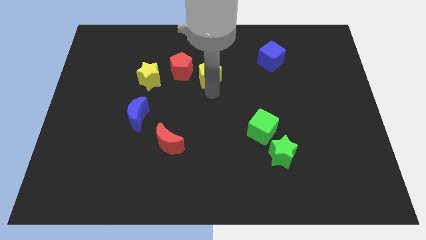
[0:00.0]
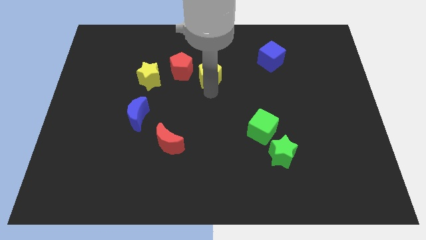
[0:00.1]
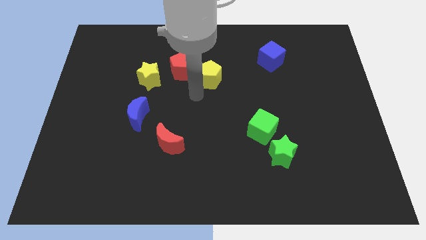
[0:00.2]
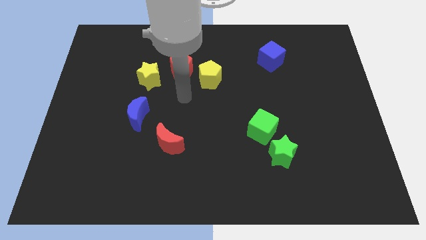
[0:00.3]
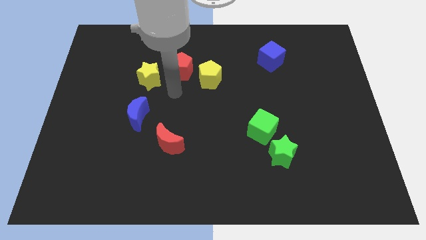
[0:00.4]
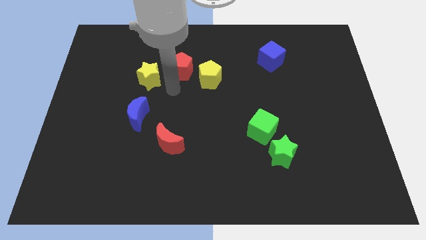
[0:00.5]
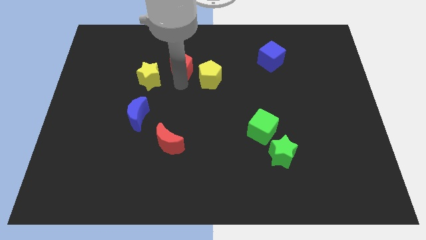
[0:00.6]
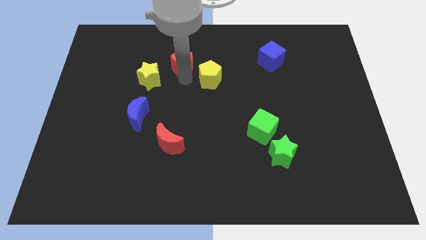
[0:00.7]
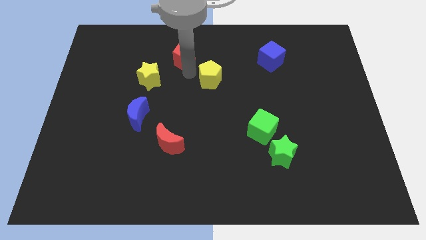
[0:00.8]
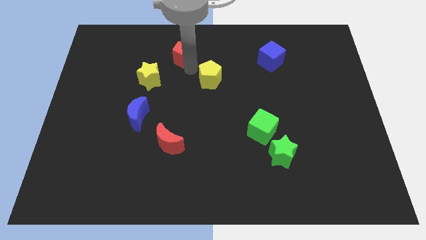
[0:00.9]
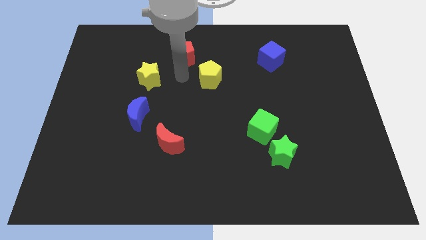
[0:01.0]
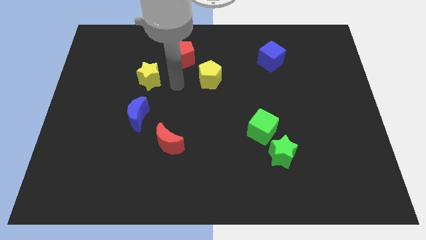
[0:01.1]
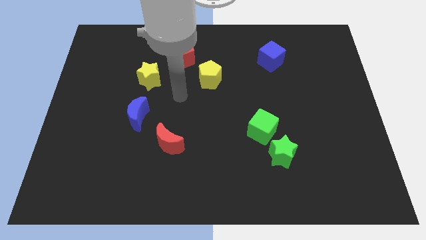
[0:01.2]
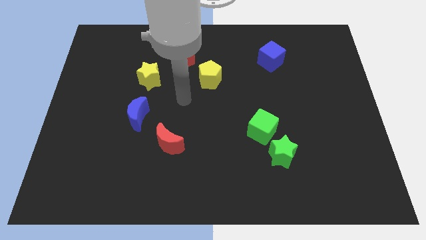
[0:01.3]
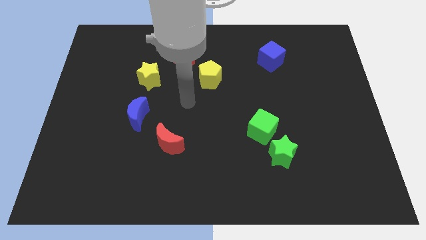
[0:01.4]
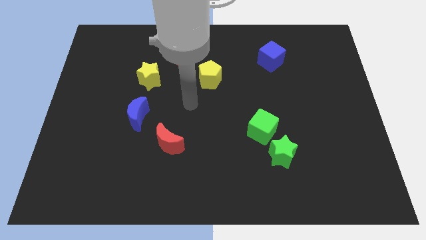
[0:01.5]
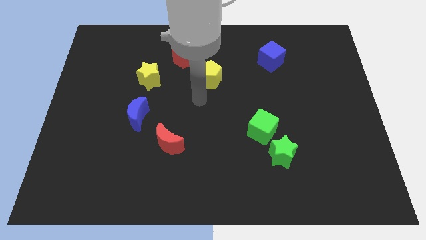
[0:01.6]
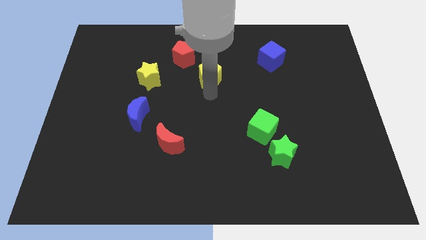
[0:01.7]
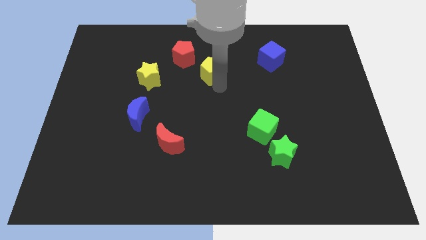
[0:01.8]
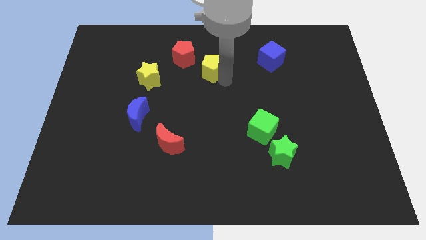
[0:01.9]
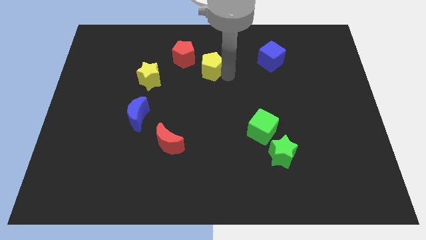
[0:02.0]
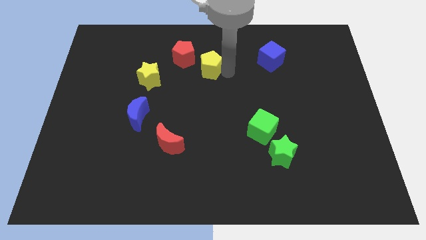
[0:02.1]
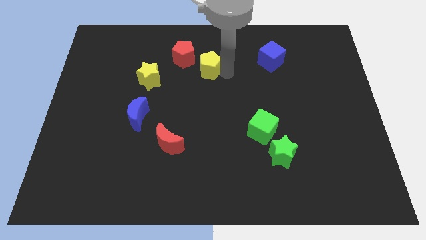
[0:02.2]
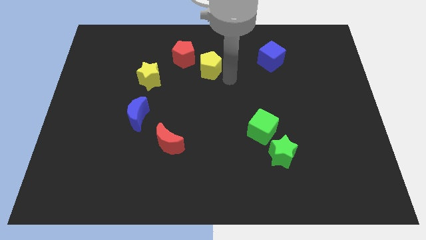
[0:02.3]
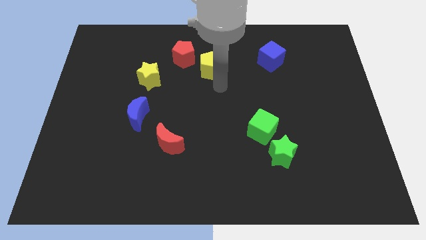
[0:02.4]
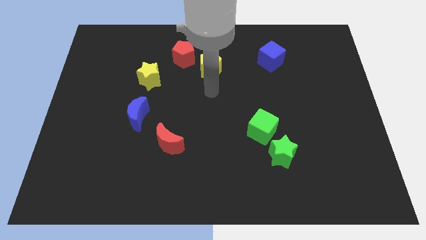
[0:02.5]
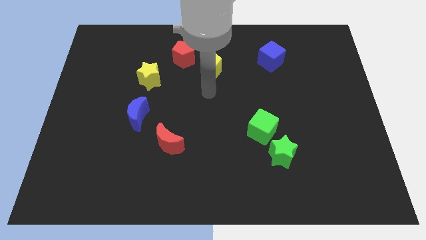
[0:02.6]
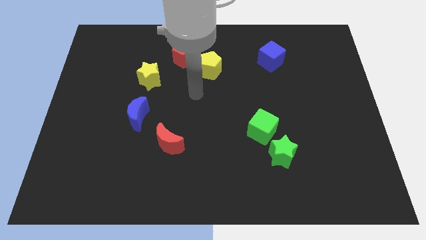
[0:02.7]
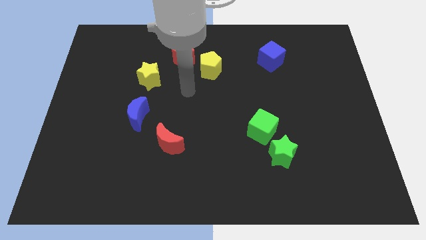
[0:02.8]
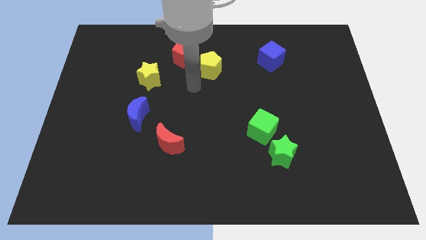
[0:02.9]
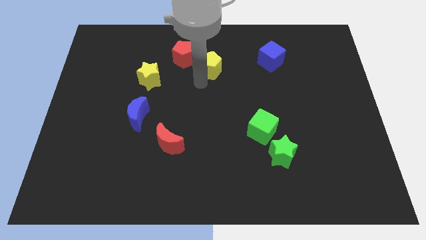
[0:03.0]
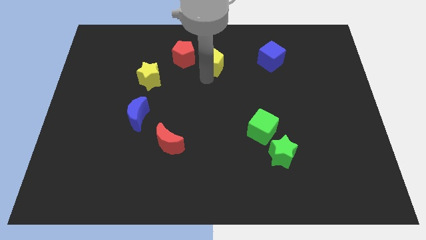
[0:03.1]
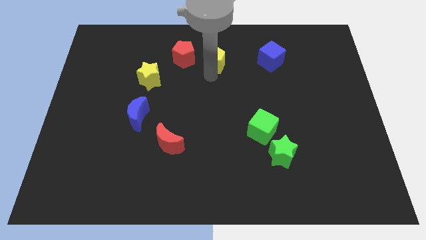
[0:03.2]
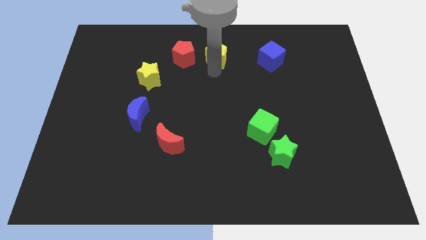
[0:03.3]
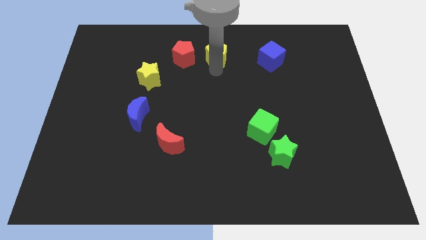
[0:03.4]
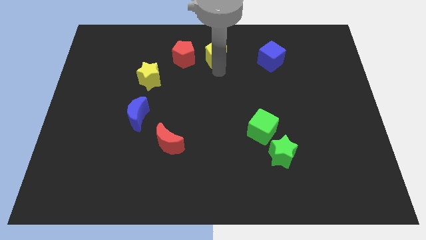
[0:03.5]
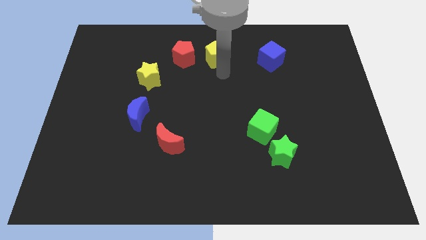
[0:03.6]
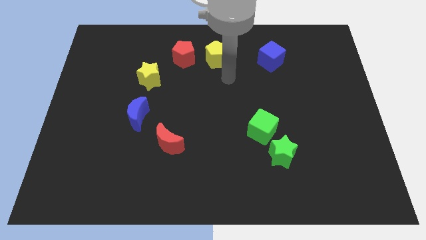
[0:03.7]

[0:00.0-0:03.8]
push the red and yellow pentagons towards the top side of the board

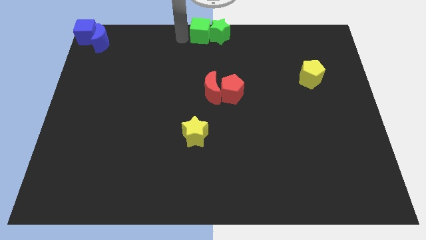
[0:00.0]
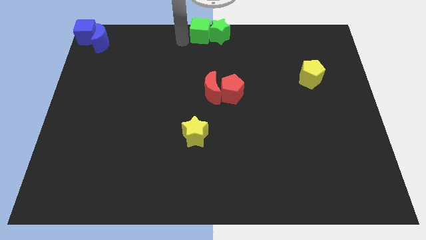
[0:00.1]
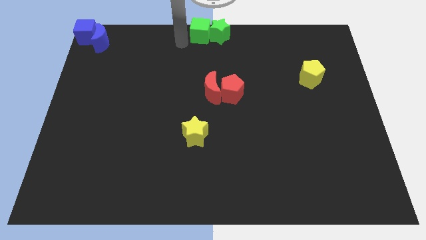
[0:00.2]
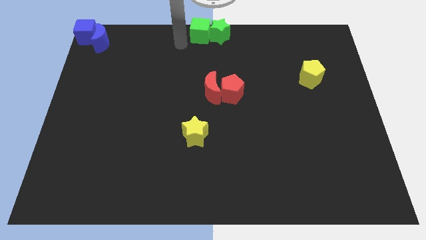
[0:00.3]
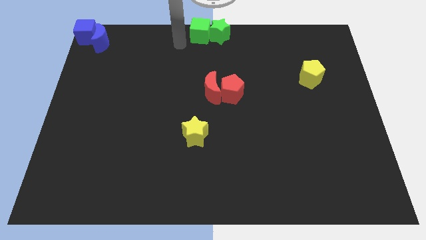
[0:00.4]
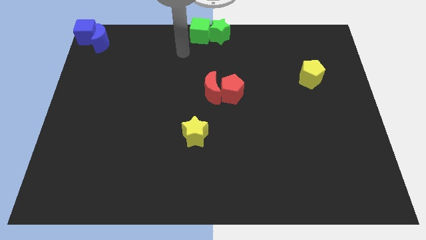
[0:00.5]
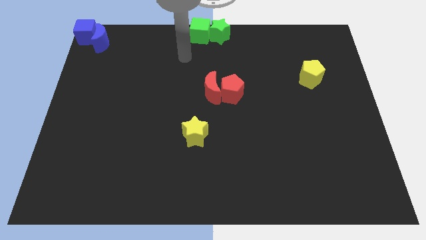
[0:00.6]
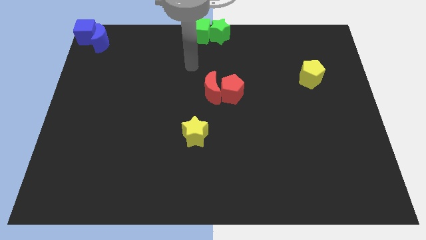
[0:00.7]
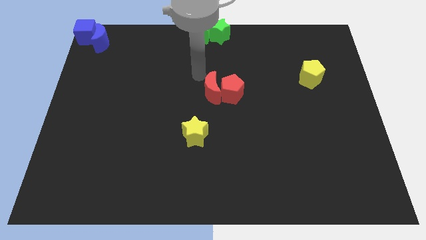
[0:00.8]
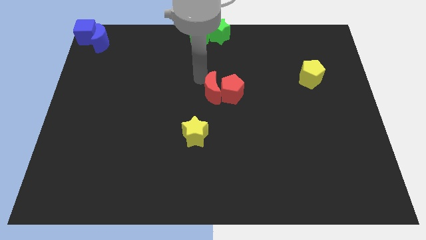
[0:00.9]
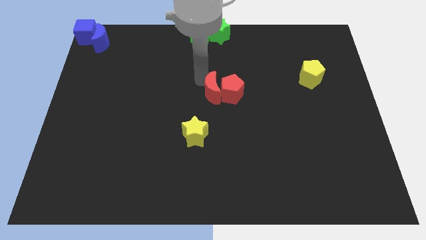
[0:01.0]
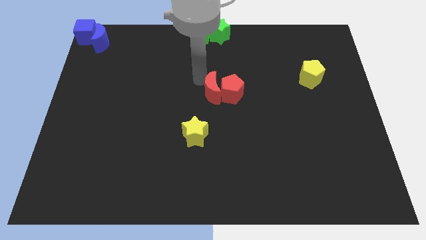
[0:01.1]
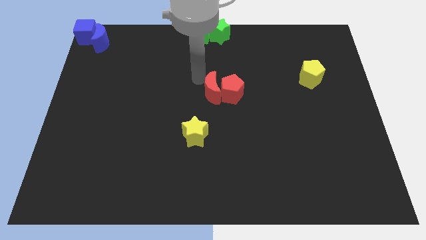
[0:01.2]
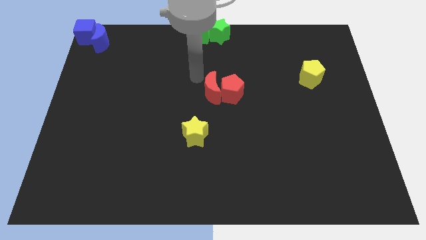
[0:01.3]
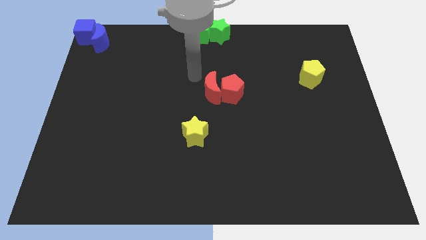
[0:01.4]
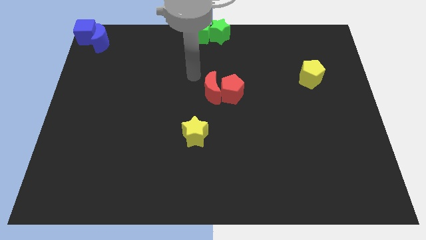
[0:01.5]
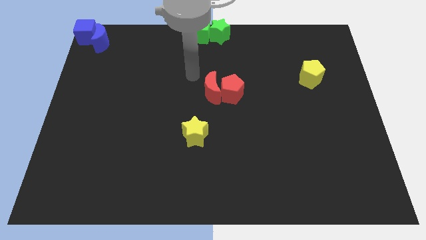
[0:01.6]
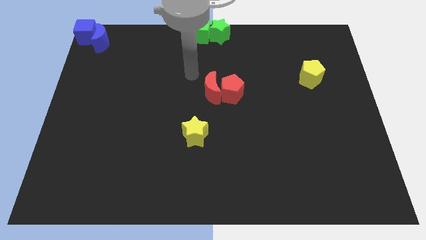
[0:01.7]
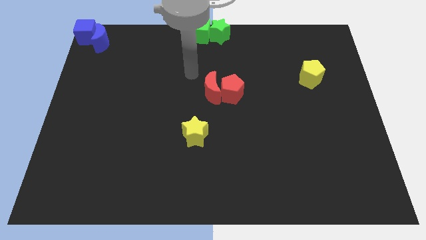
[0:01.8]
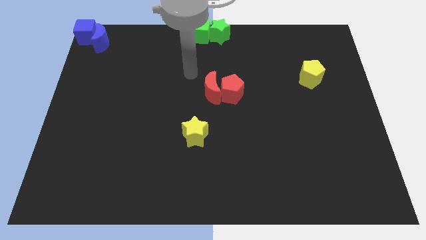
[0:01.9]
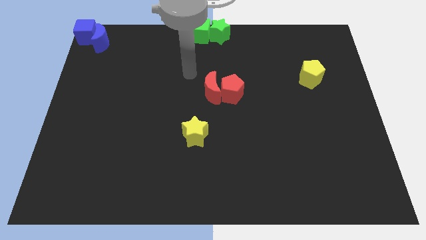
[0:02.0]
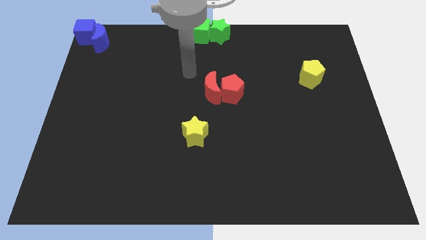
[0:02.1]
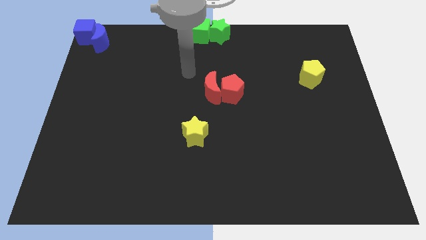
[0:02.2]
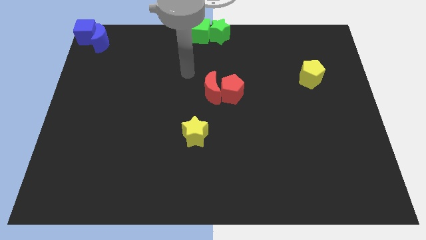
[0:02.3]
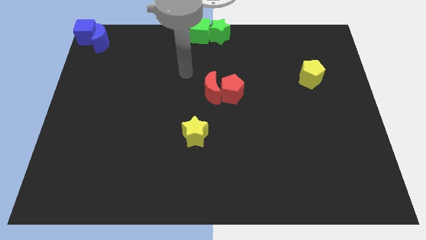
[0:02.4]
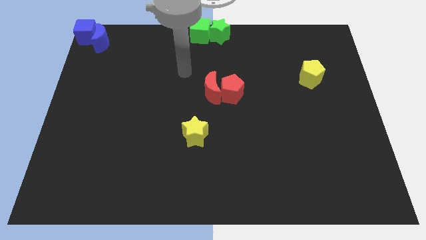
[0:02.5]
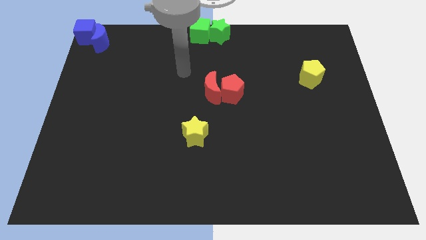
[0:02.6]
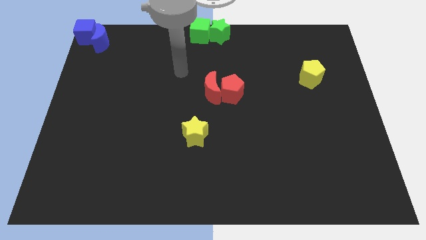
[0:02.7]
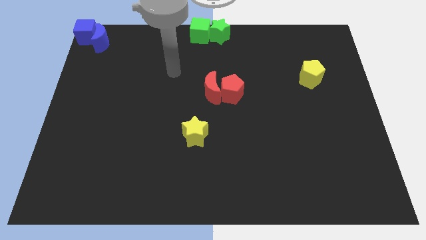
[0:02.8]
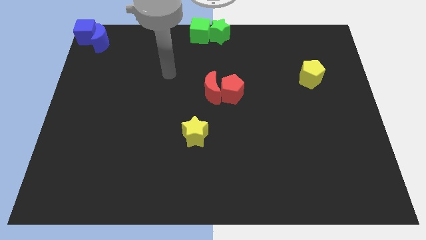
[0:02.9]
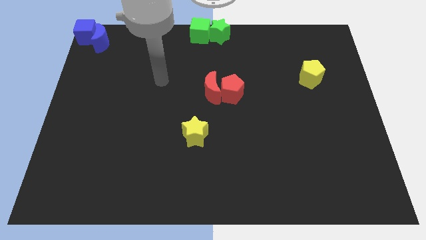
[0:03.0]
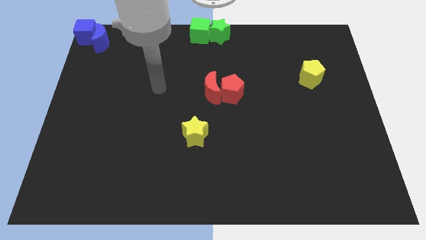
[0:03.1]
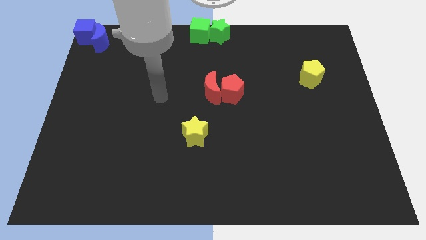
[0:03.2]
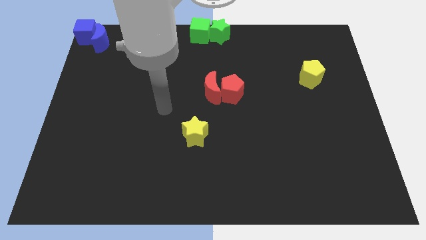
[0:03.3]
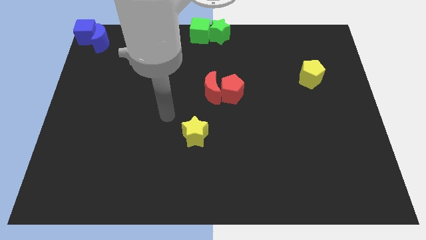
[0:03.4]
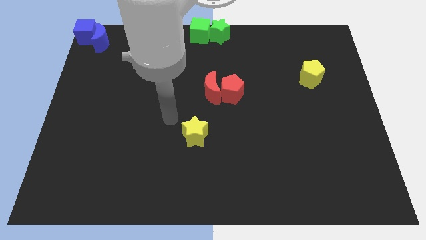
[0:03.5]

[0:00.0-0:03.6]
move the arm to the top left side of the yellow star

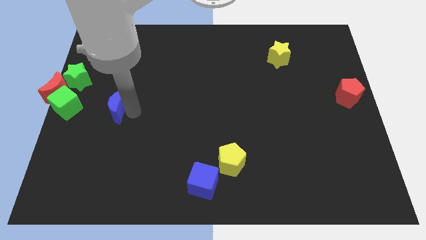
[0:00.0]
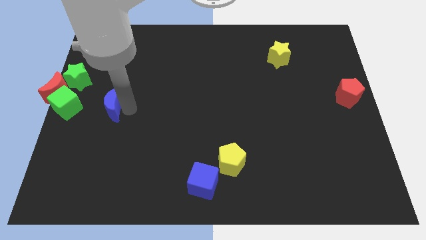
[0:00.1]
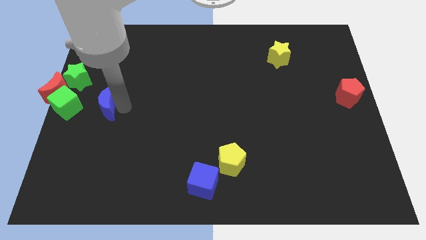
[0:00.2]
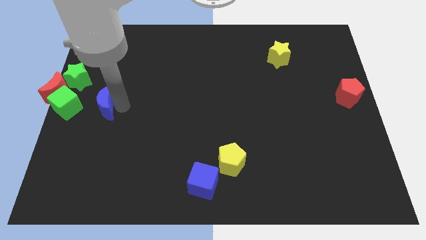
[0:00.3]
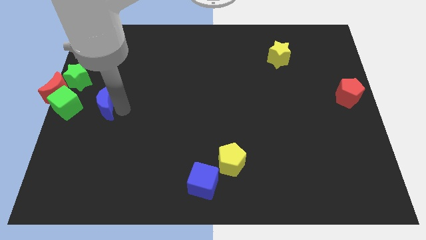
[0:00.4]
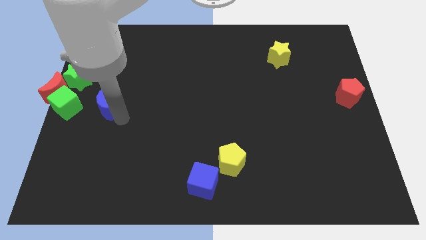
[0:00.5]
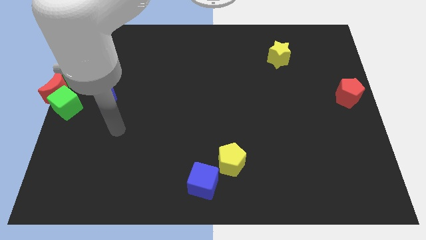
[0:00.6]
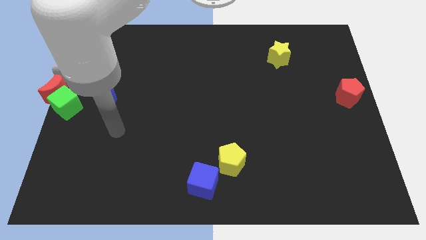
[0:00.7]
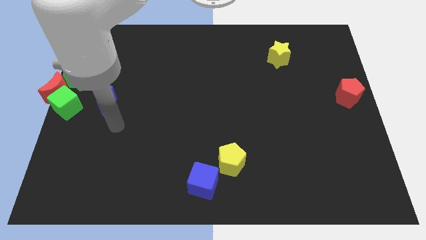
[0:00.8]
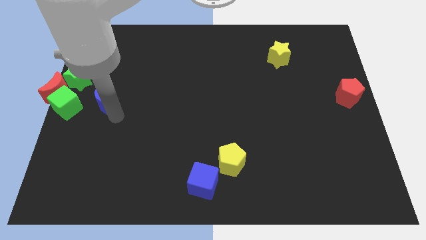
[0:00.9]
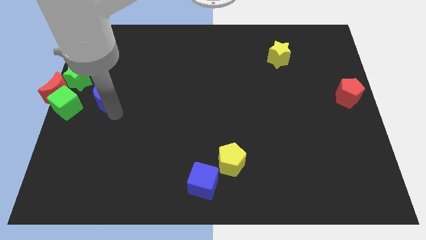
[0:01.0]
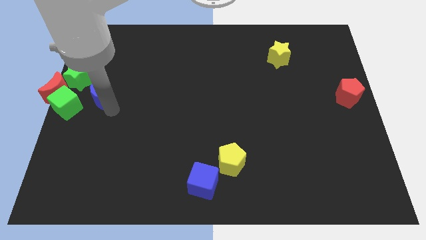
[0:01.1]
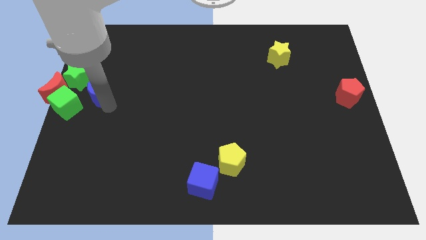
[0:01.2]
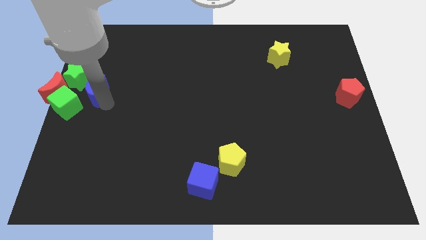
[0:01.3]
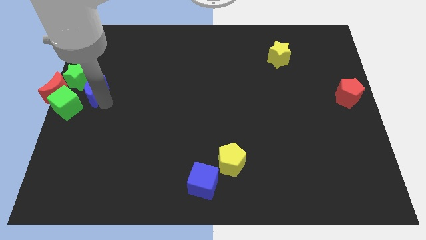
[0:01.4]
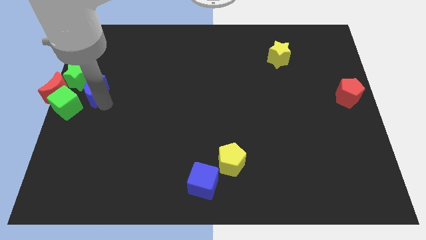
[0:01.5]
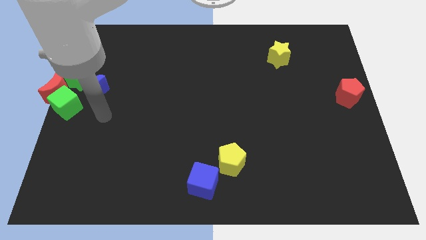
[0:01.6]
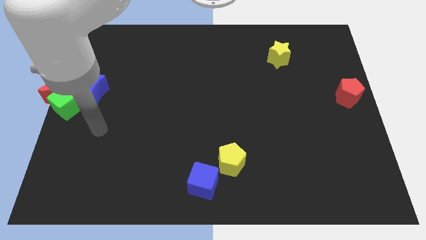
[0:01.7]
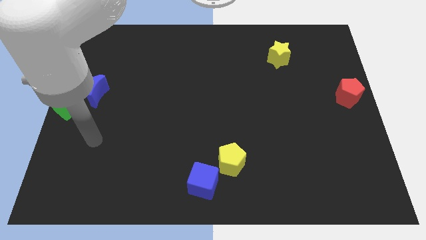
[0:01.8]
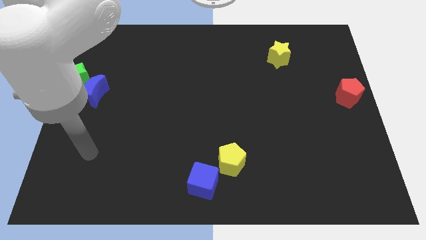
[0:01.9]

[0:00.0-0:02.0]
move blue moon close to the green star
